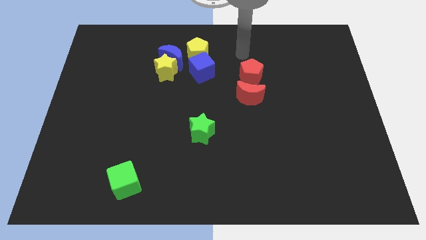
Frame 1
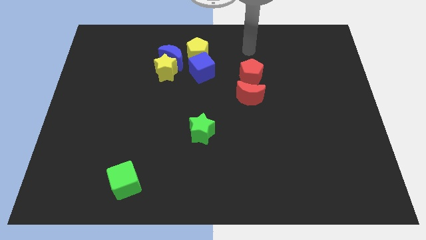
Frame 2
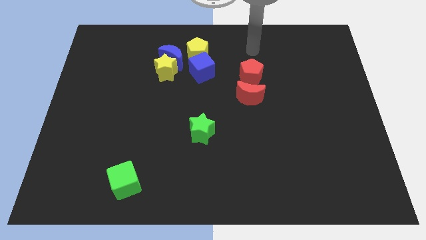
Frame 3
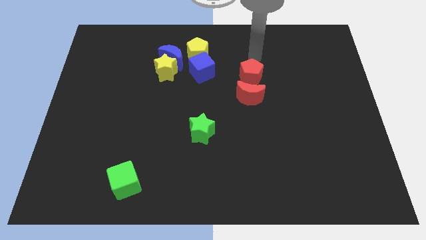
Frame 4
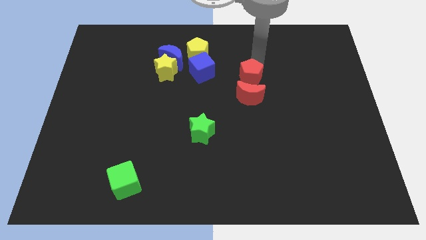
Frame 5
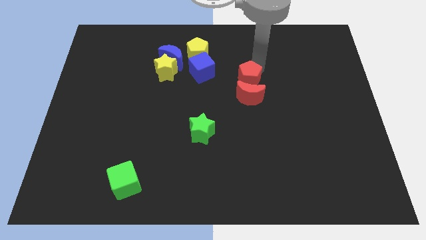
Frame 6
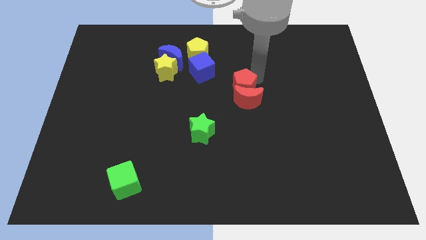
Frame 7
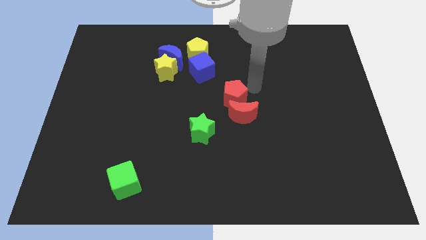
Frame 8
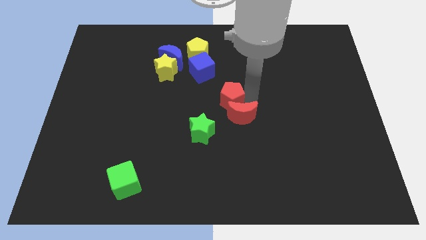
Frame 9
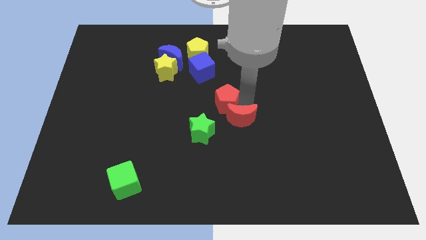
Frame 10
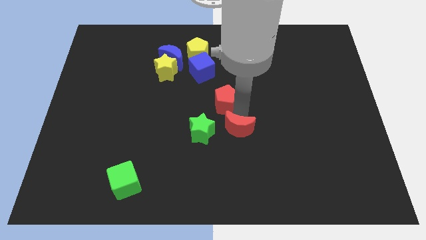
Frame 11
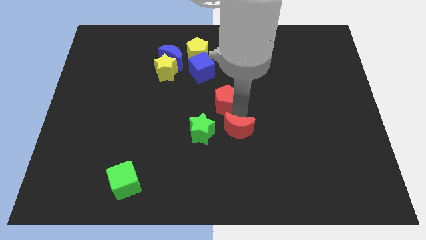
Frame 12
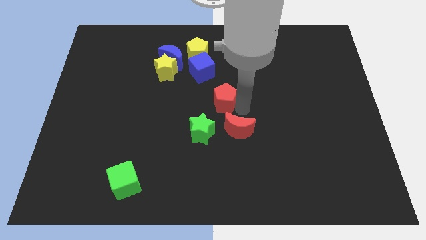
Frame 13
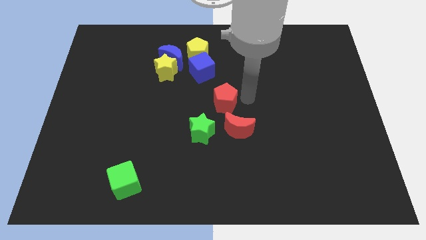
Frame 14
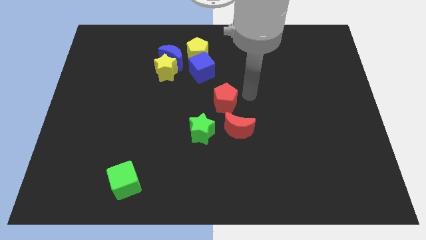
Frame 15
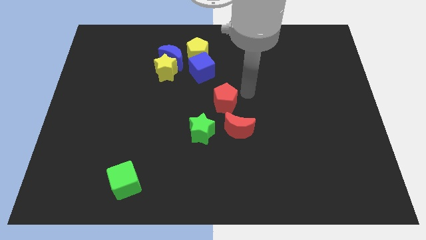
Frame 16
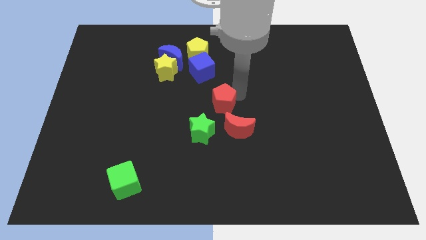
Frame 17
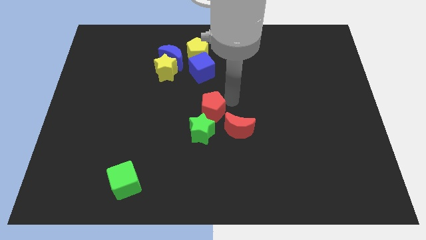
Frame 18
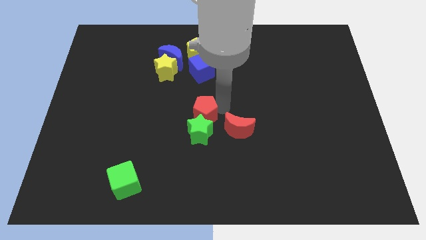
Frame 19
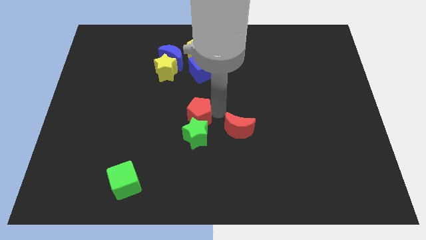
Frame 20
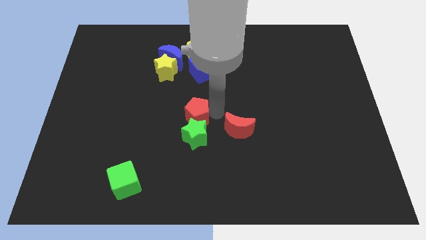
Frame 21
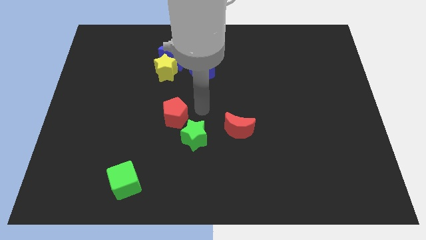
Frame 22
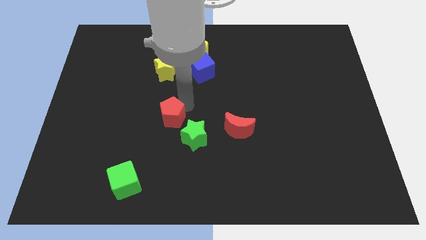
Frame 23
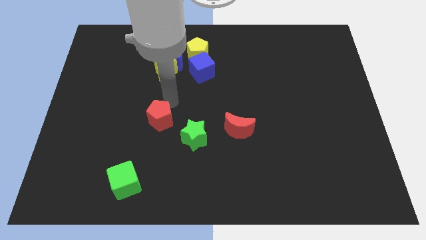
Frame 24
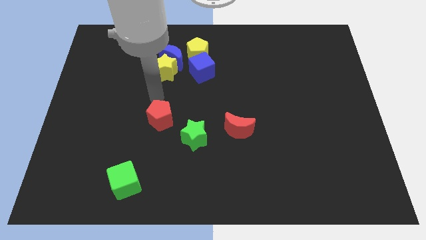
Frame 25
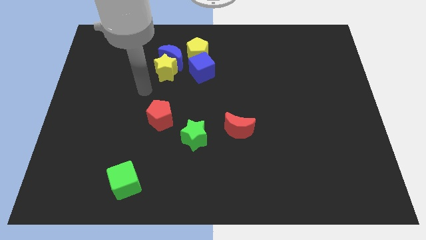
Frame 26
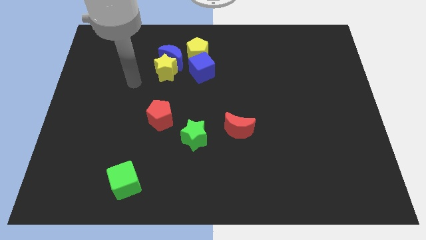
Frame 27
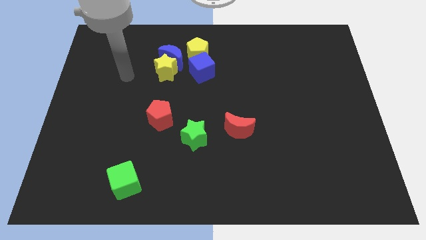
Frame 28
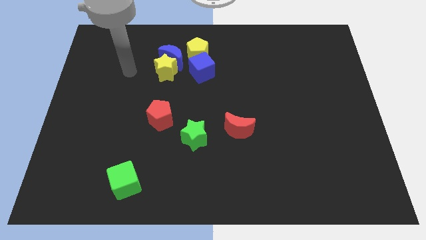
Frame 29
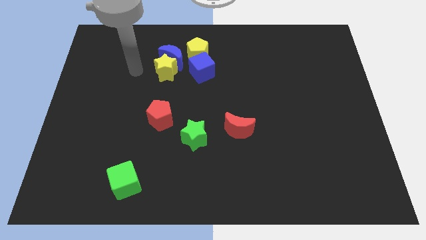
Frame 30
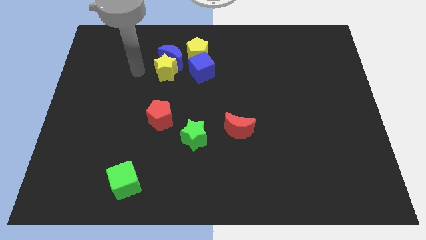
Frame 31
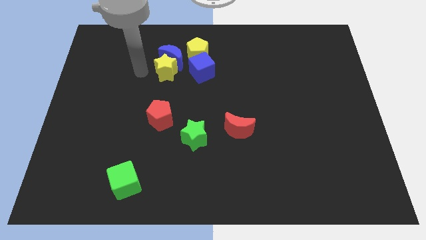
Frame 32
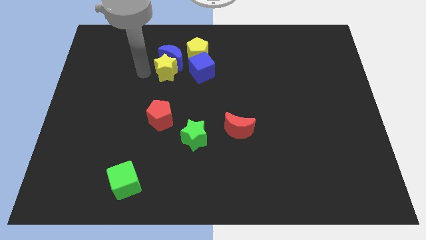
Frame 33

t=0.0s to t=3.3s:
separate red moon and red pentagon

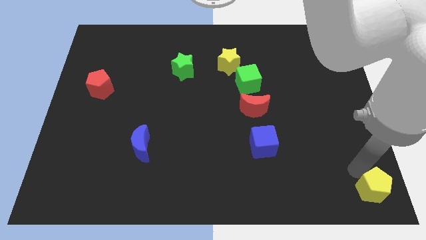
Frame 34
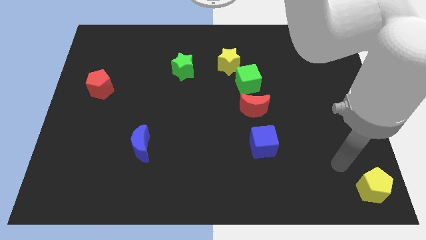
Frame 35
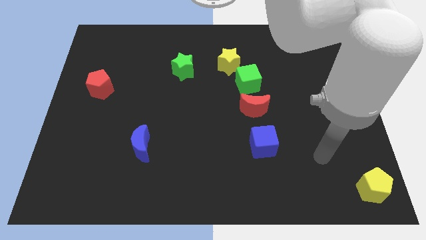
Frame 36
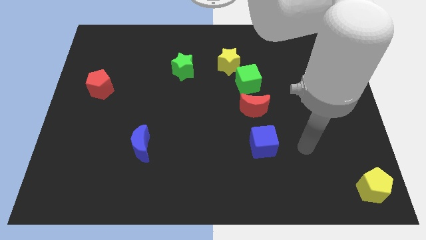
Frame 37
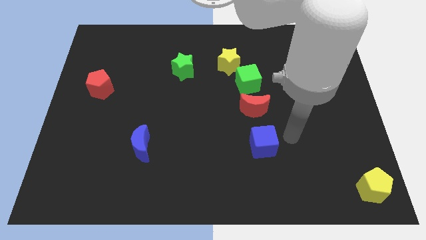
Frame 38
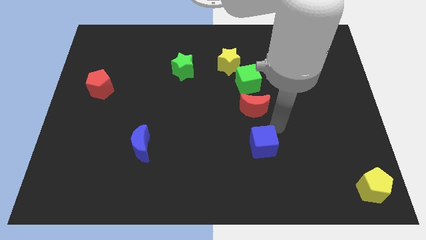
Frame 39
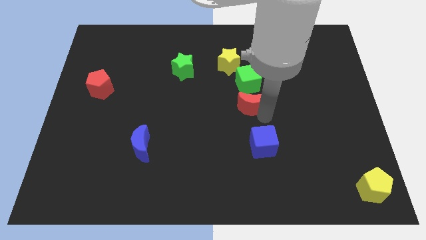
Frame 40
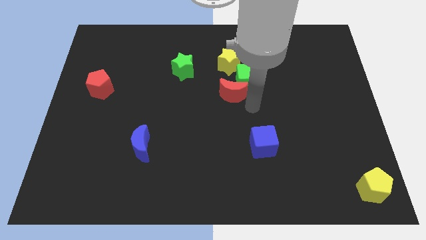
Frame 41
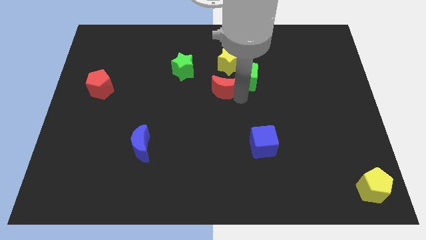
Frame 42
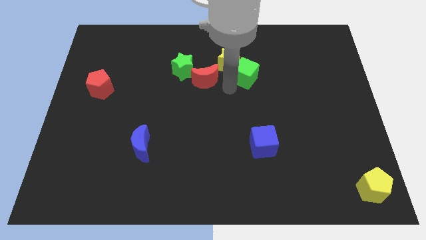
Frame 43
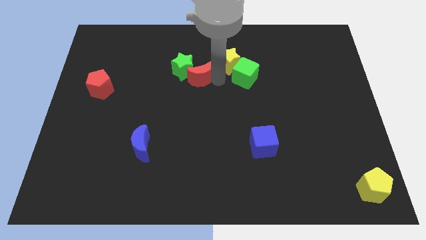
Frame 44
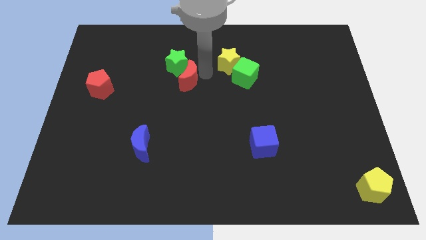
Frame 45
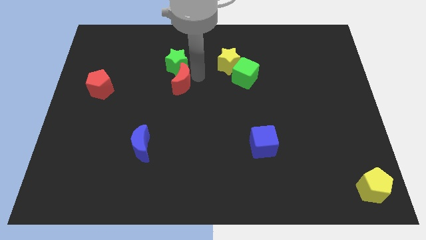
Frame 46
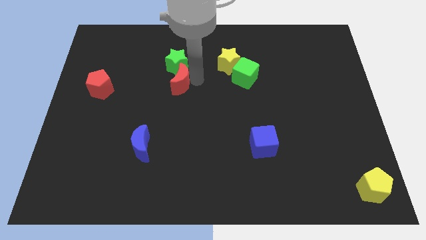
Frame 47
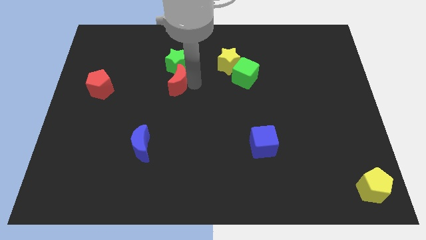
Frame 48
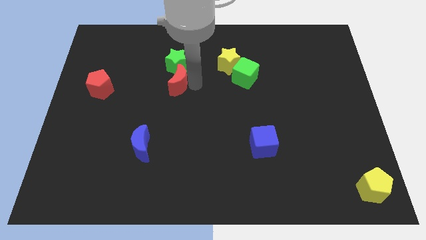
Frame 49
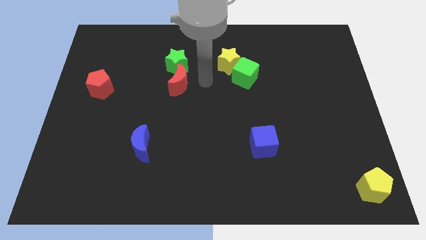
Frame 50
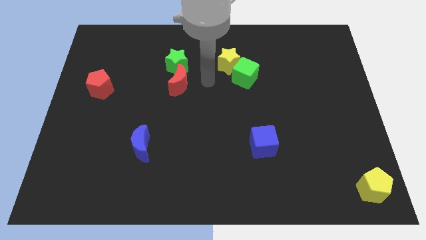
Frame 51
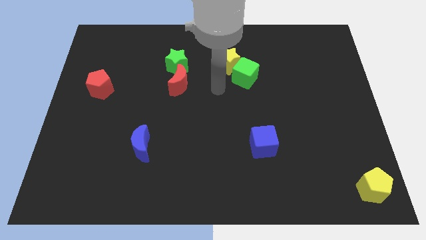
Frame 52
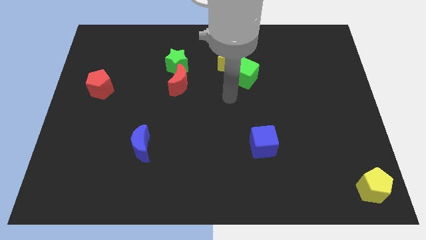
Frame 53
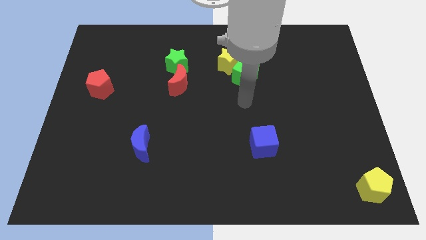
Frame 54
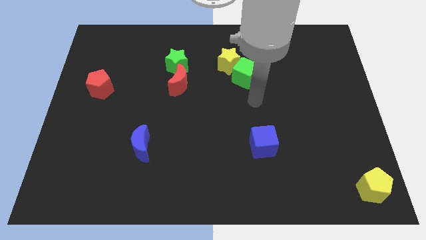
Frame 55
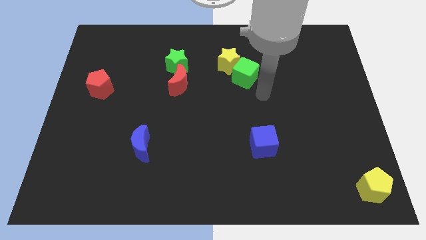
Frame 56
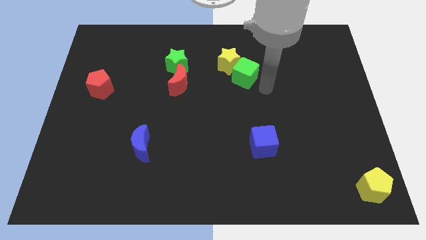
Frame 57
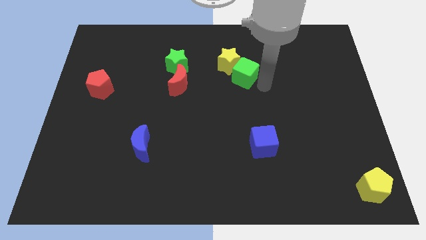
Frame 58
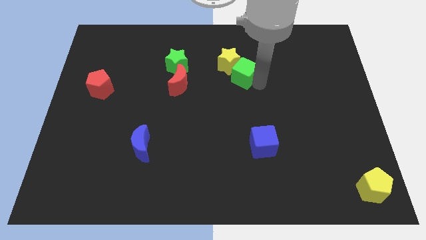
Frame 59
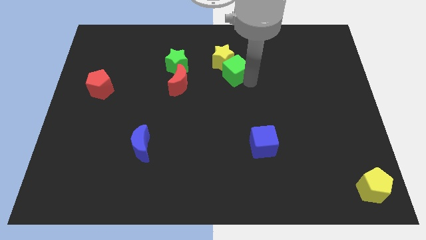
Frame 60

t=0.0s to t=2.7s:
push the green blocks red moon nd yellow star towards the left side of the board

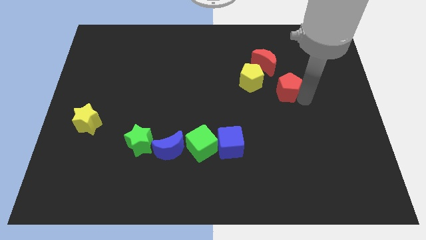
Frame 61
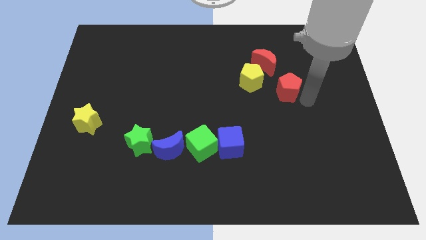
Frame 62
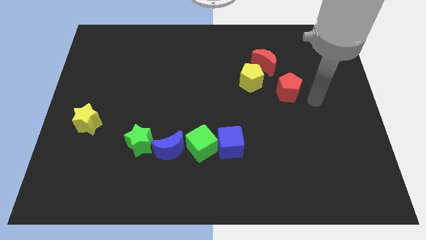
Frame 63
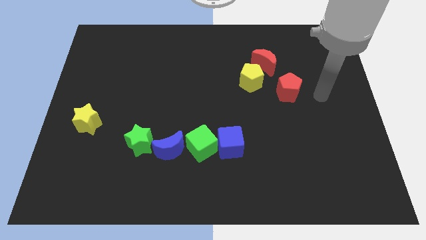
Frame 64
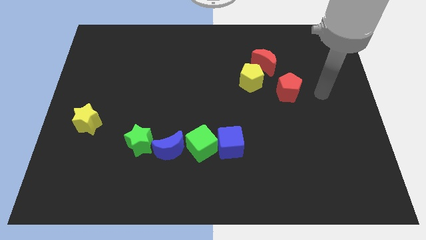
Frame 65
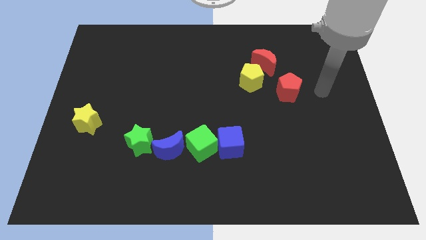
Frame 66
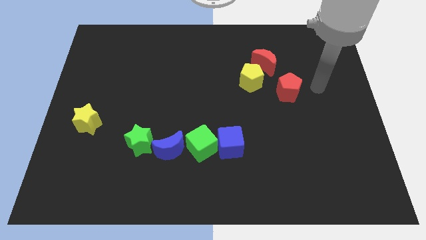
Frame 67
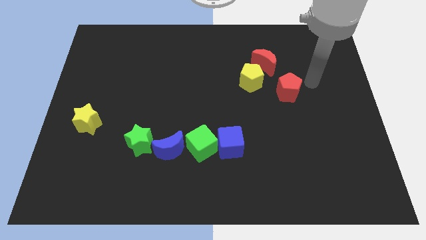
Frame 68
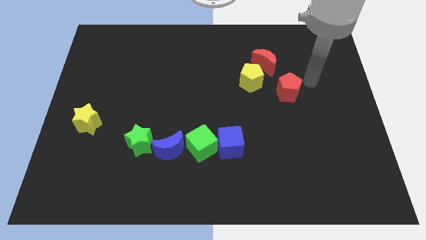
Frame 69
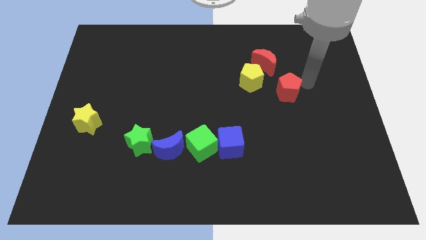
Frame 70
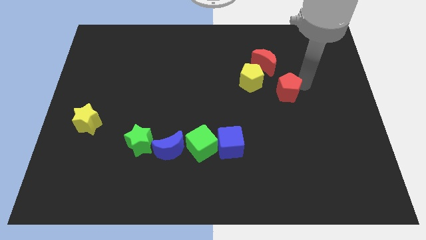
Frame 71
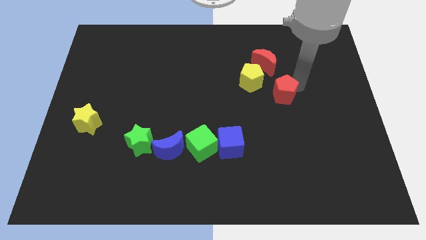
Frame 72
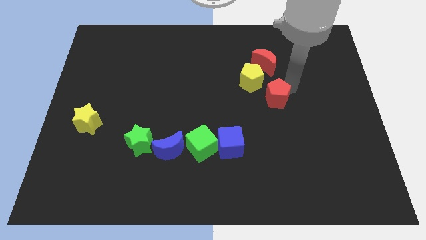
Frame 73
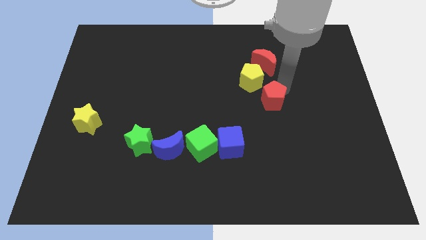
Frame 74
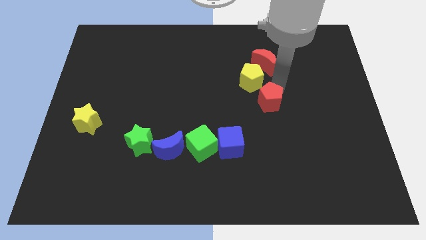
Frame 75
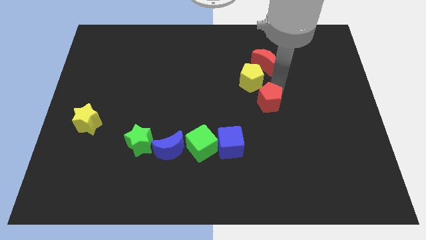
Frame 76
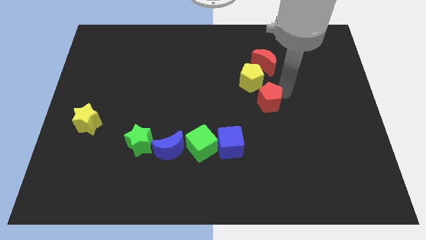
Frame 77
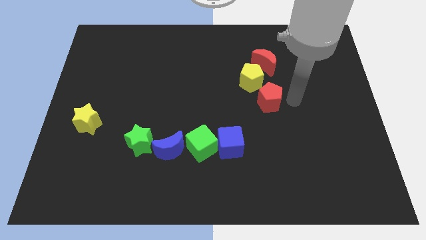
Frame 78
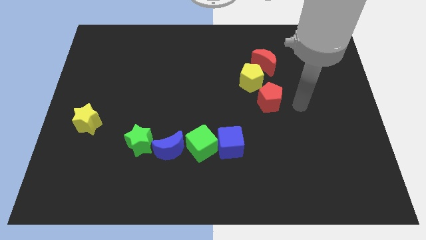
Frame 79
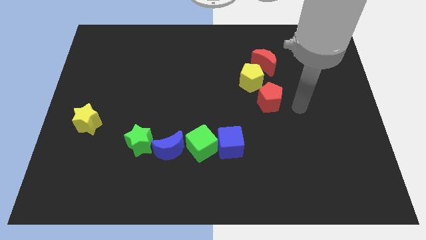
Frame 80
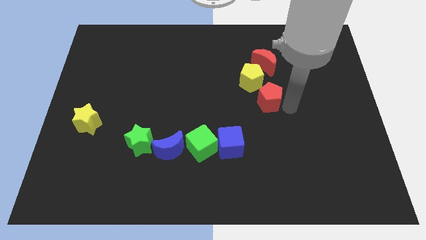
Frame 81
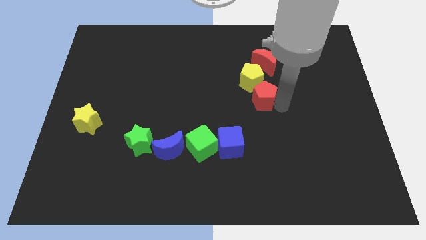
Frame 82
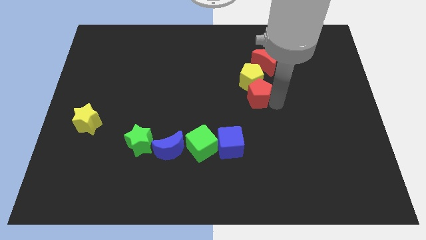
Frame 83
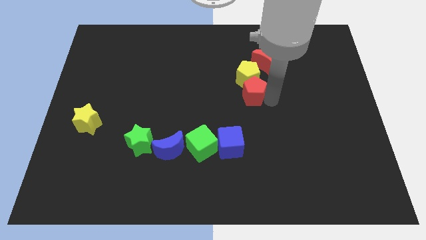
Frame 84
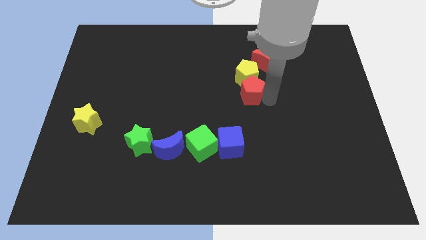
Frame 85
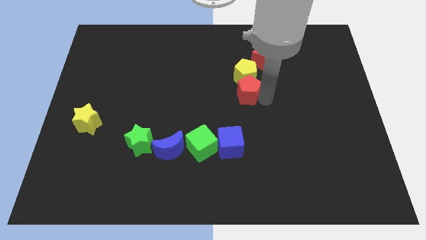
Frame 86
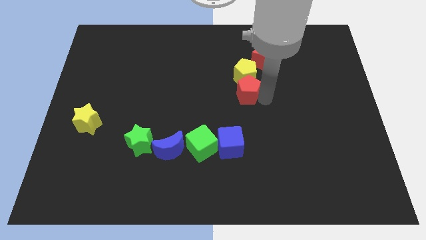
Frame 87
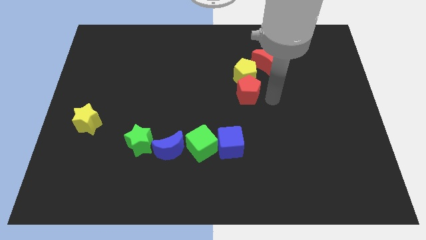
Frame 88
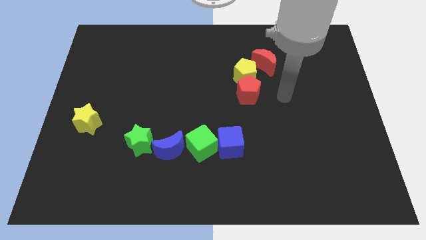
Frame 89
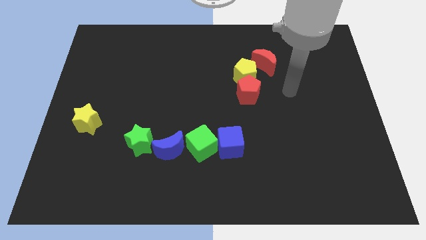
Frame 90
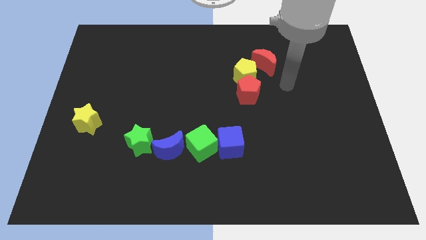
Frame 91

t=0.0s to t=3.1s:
push the red pentagon into the yellow pentagon
